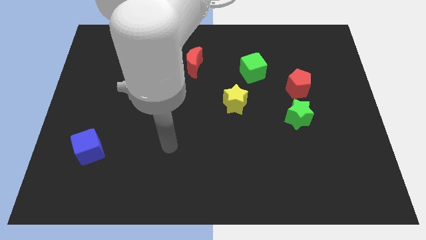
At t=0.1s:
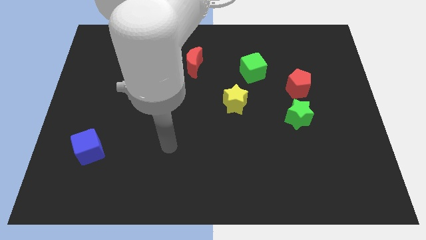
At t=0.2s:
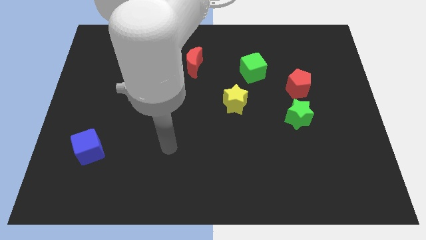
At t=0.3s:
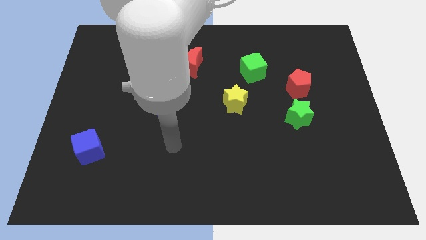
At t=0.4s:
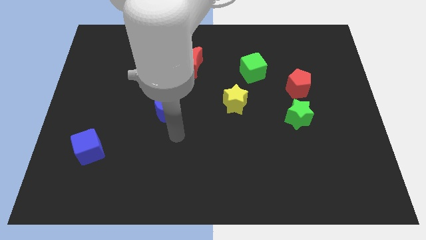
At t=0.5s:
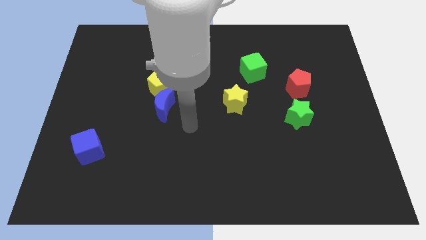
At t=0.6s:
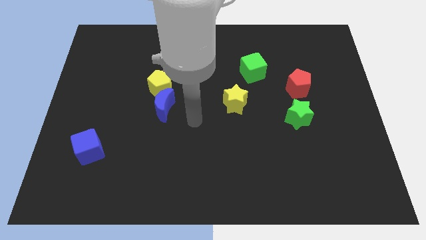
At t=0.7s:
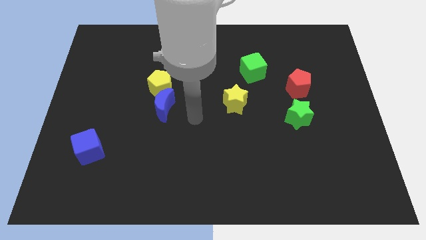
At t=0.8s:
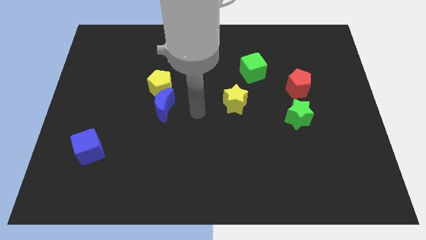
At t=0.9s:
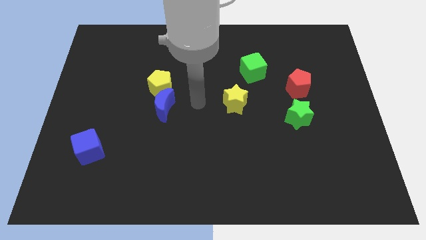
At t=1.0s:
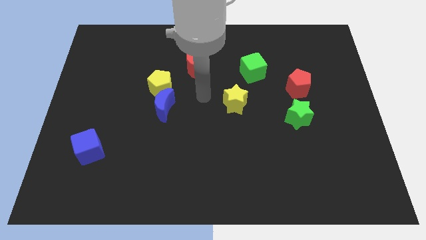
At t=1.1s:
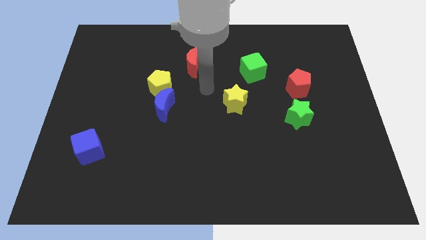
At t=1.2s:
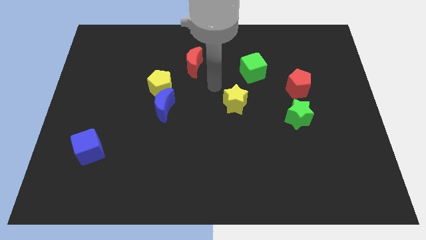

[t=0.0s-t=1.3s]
push your hand in between the red crescent and yellow star

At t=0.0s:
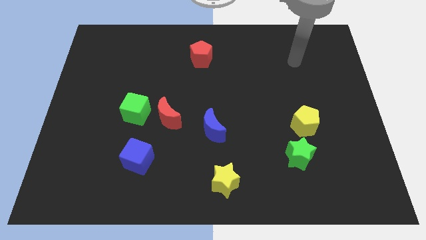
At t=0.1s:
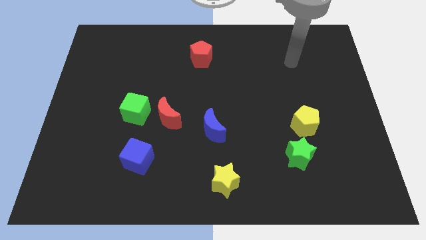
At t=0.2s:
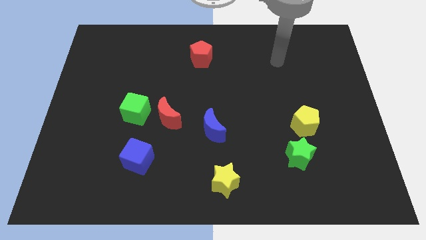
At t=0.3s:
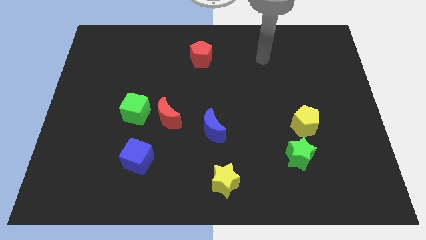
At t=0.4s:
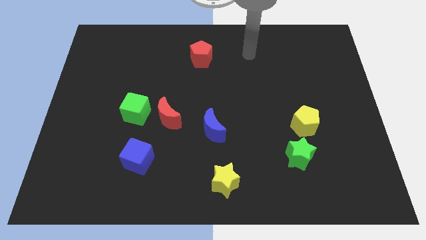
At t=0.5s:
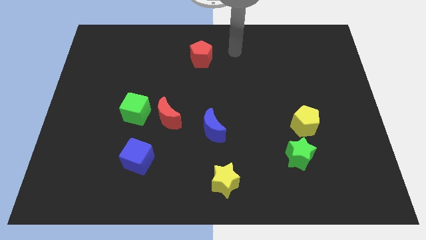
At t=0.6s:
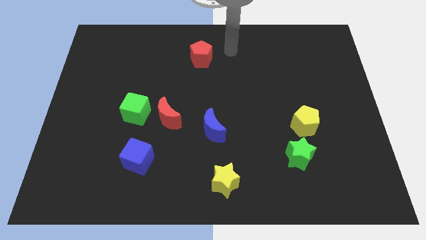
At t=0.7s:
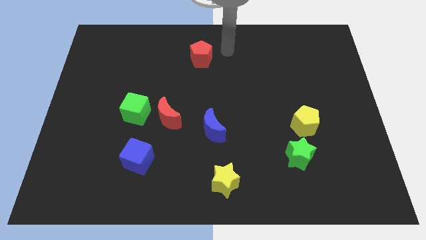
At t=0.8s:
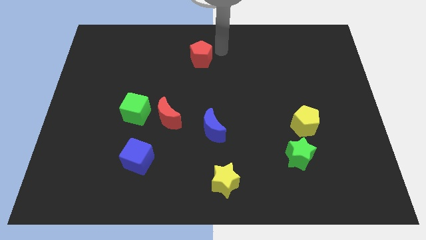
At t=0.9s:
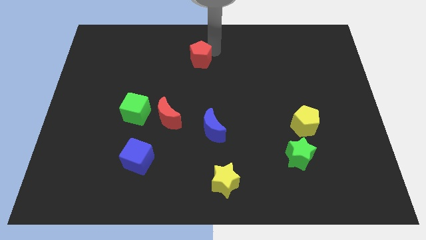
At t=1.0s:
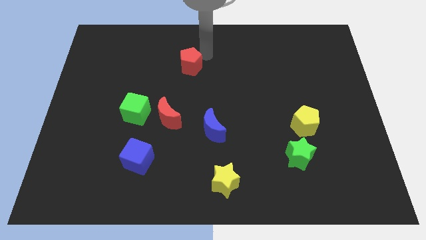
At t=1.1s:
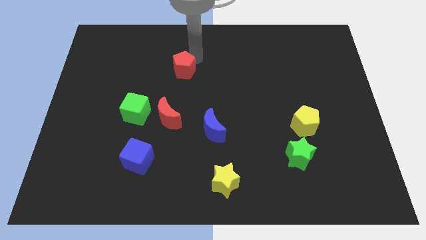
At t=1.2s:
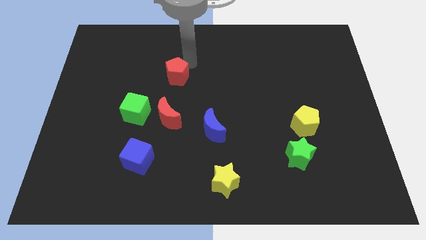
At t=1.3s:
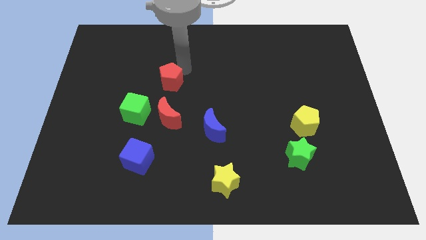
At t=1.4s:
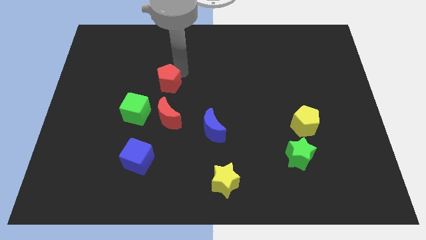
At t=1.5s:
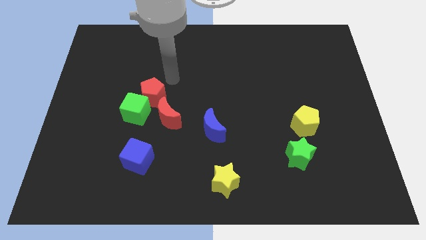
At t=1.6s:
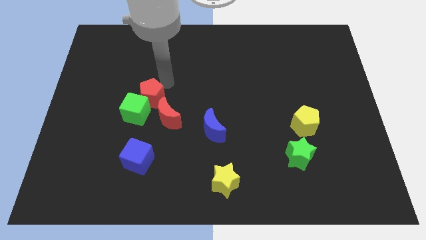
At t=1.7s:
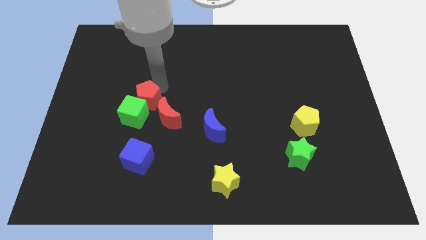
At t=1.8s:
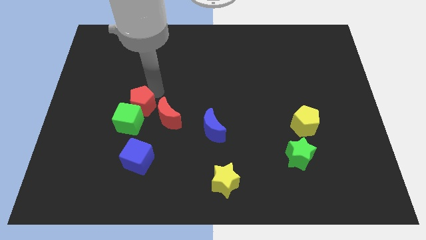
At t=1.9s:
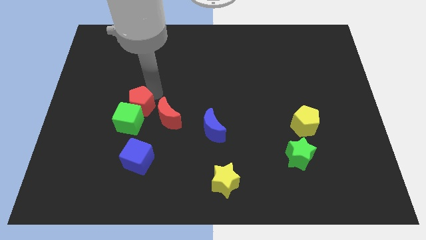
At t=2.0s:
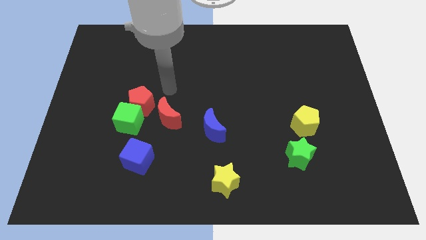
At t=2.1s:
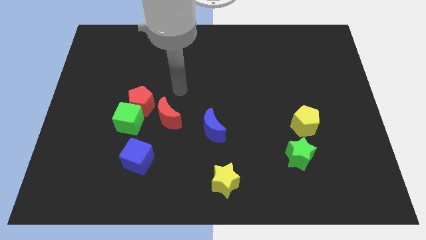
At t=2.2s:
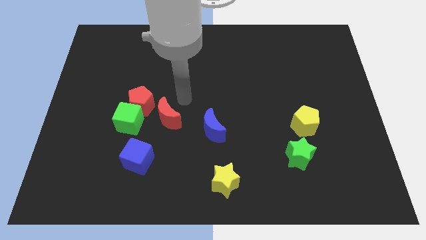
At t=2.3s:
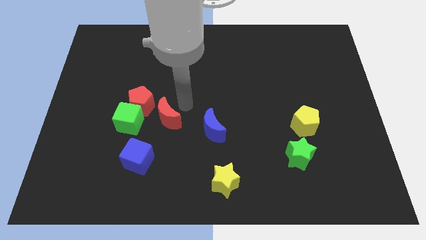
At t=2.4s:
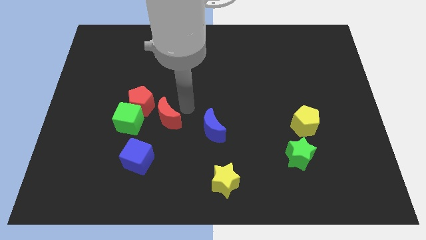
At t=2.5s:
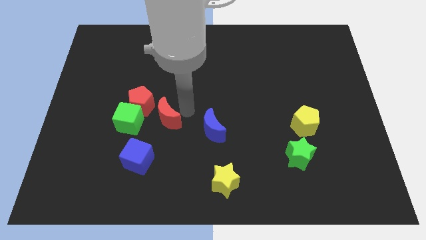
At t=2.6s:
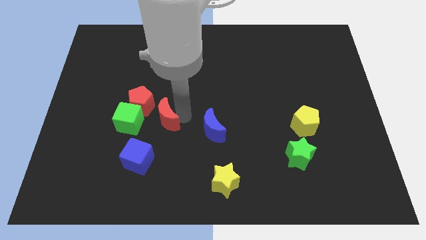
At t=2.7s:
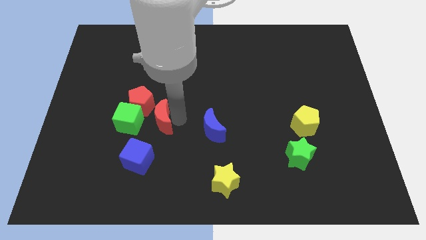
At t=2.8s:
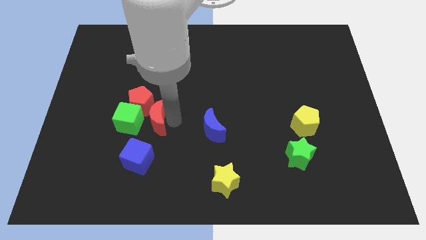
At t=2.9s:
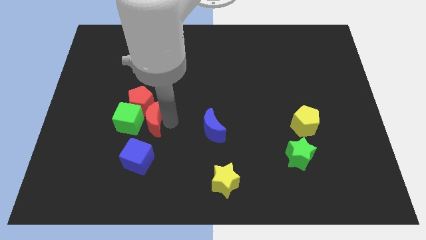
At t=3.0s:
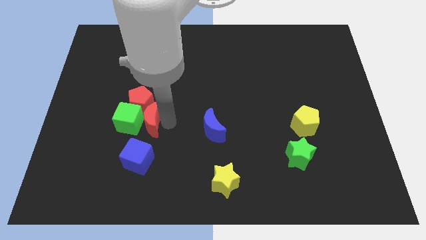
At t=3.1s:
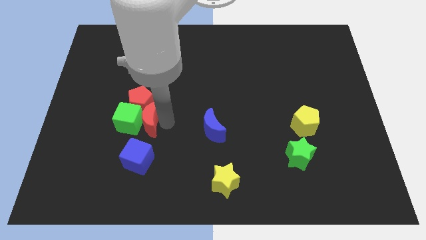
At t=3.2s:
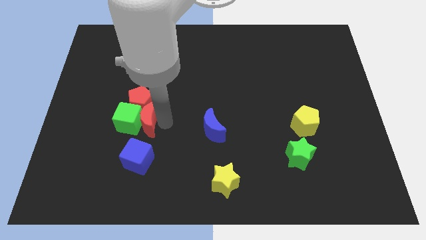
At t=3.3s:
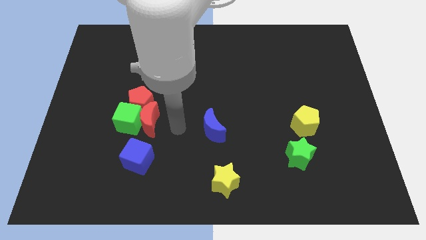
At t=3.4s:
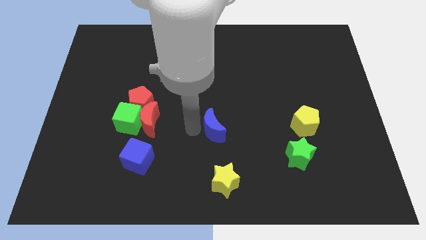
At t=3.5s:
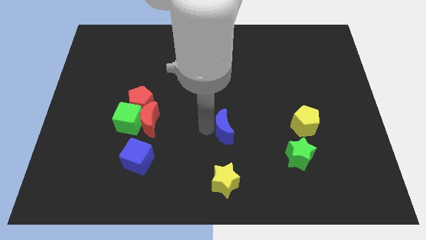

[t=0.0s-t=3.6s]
move the red blocks towards the green cube

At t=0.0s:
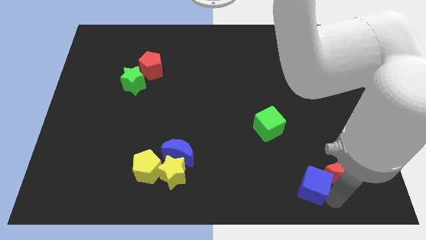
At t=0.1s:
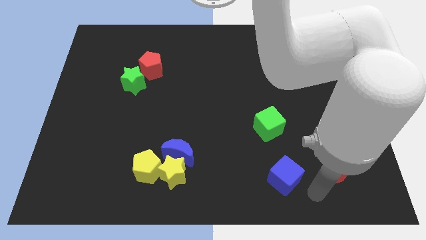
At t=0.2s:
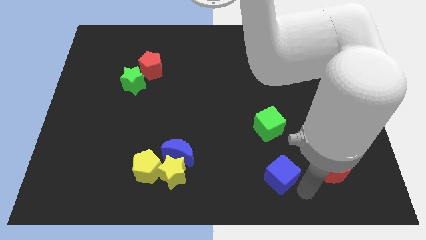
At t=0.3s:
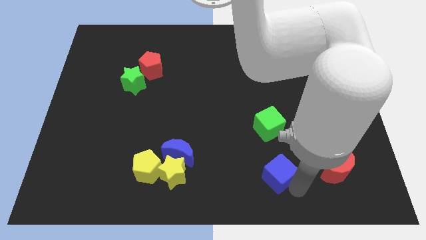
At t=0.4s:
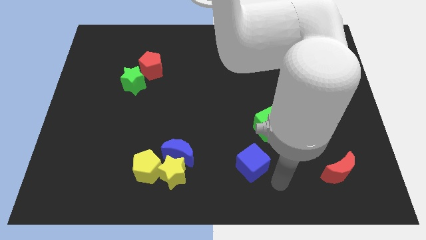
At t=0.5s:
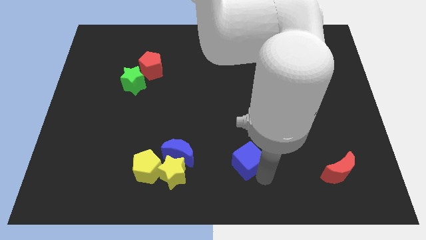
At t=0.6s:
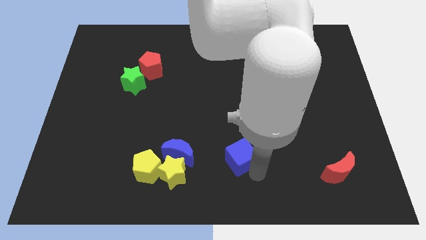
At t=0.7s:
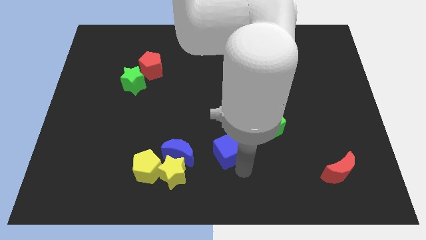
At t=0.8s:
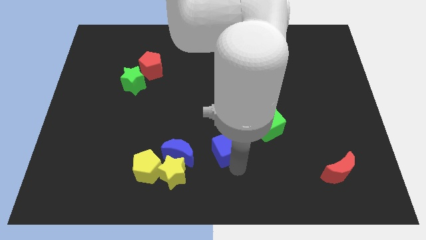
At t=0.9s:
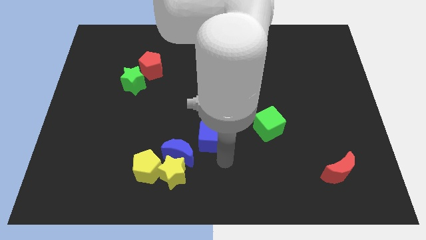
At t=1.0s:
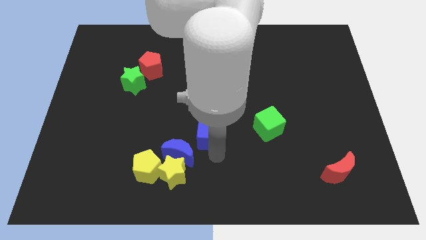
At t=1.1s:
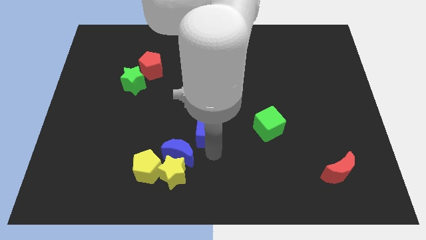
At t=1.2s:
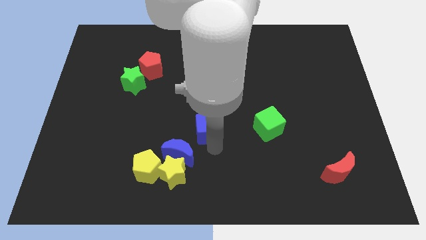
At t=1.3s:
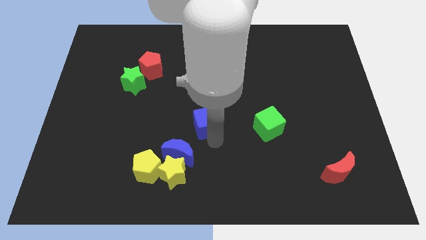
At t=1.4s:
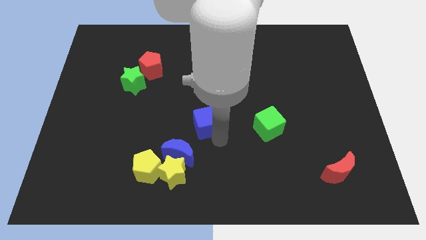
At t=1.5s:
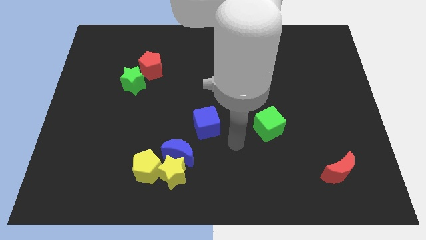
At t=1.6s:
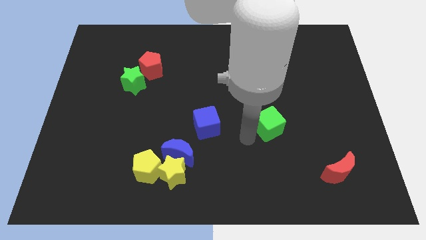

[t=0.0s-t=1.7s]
separate the blue cube from the red moon

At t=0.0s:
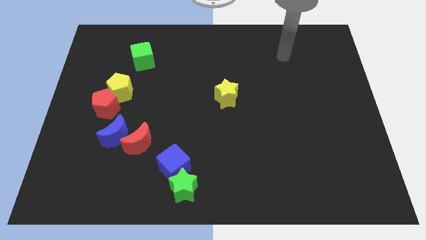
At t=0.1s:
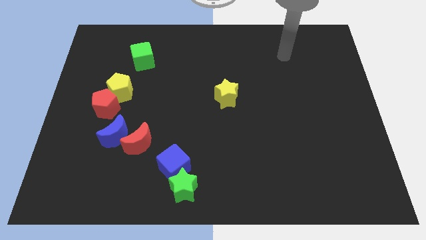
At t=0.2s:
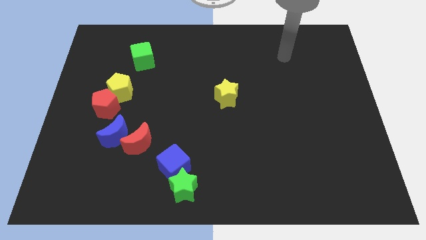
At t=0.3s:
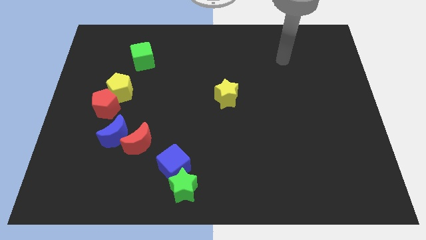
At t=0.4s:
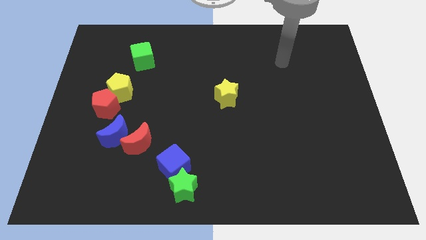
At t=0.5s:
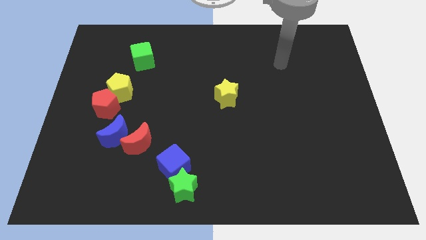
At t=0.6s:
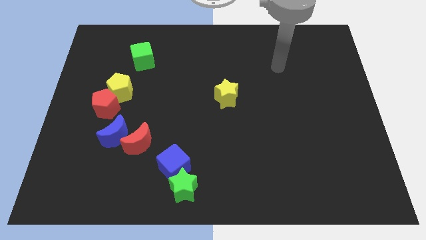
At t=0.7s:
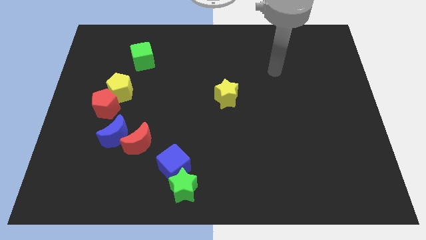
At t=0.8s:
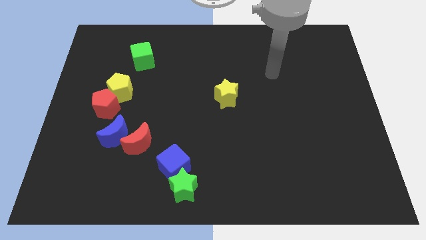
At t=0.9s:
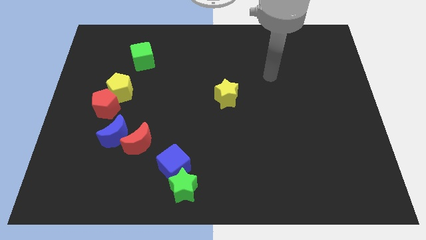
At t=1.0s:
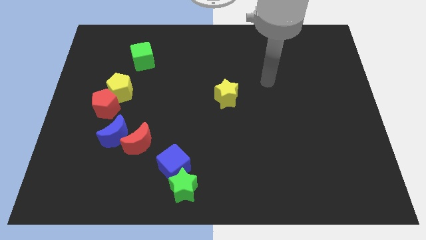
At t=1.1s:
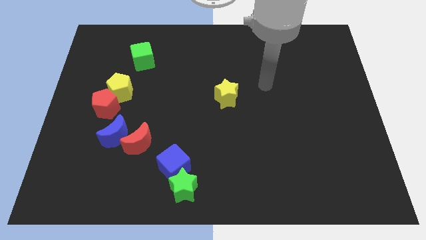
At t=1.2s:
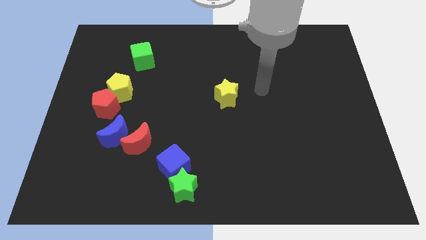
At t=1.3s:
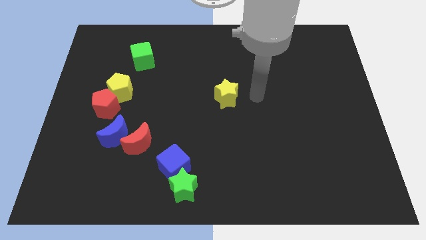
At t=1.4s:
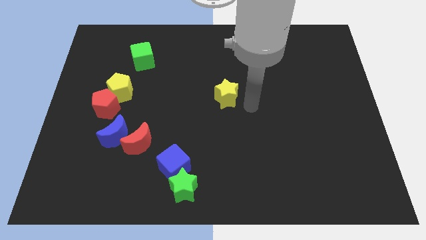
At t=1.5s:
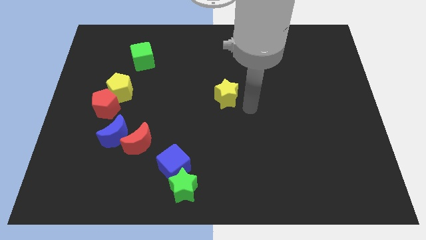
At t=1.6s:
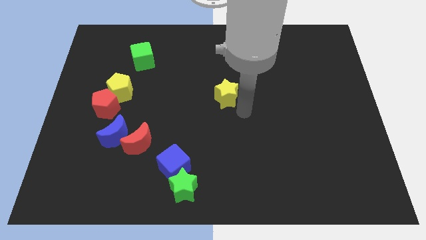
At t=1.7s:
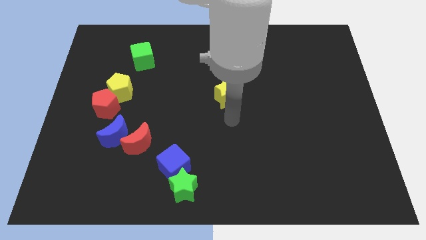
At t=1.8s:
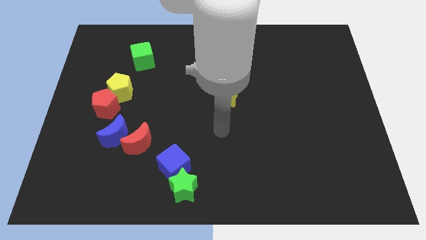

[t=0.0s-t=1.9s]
move the arm below the yellow star

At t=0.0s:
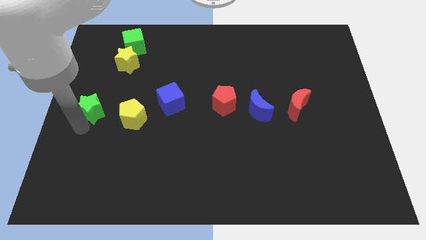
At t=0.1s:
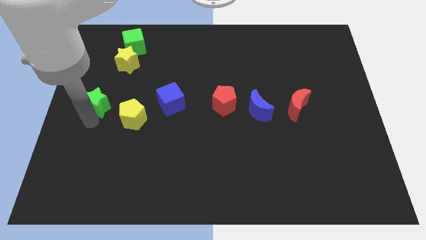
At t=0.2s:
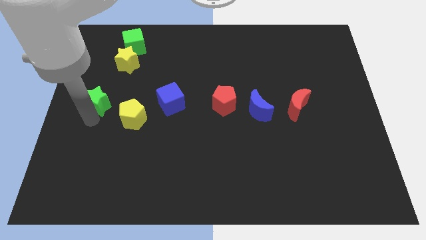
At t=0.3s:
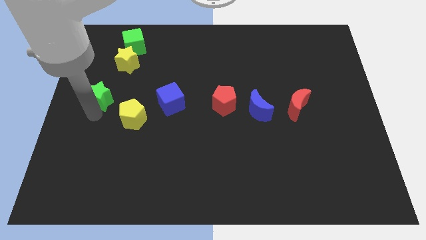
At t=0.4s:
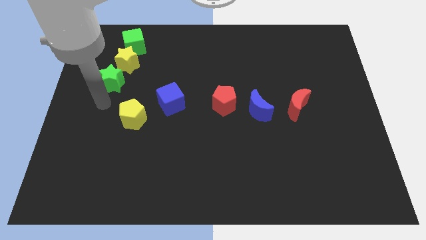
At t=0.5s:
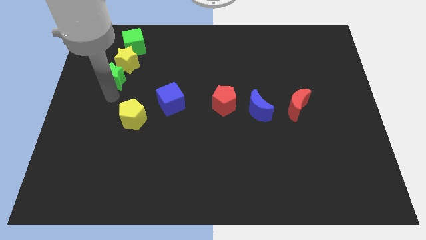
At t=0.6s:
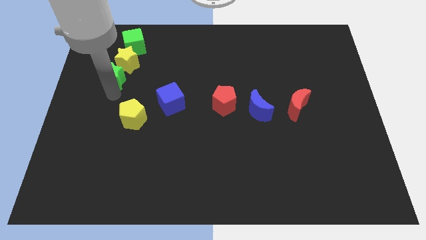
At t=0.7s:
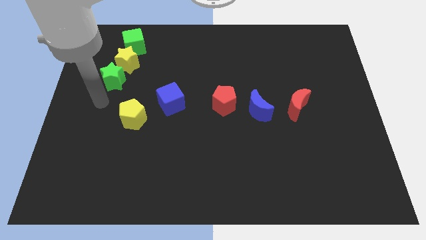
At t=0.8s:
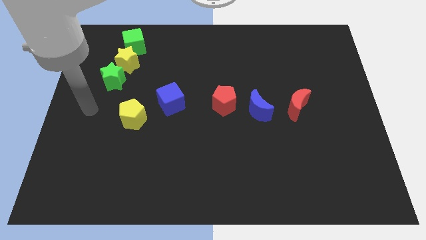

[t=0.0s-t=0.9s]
push green star into the yellow star
